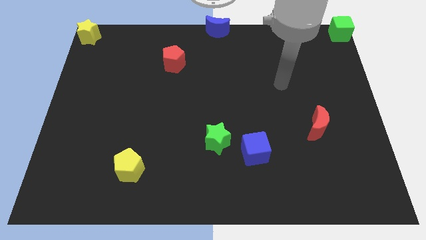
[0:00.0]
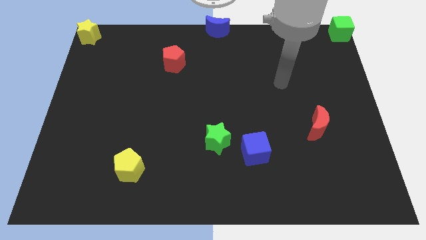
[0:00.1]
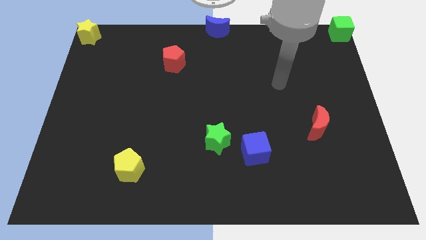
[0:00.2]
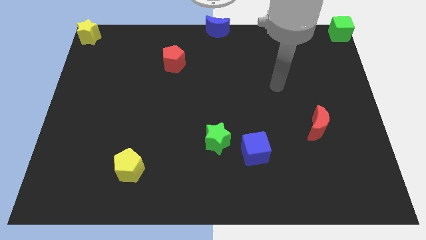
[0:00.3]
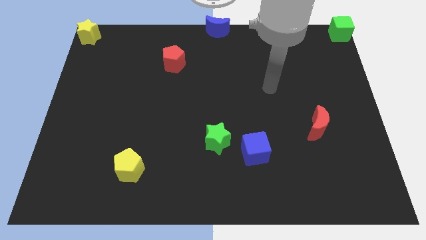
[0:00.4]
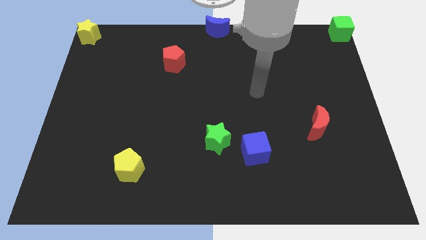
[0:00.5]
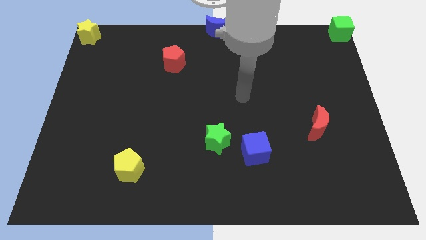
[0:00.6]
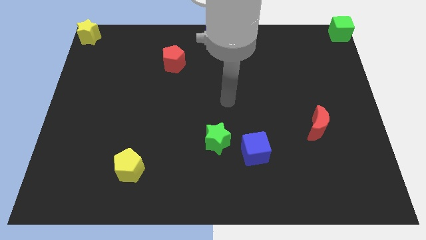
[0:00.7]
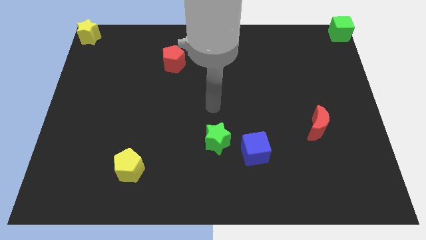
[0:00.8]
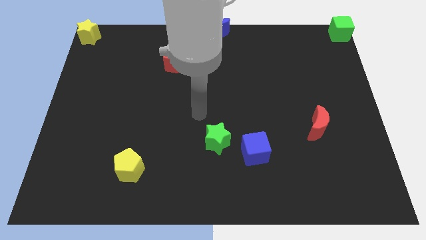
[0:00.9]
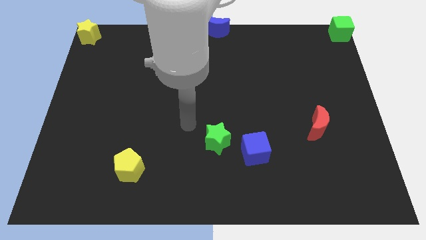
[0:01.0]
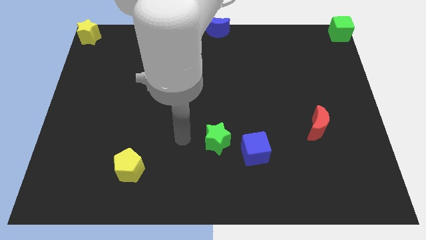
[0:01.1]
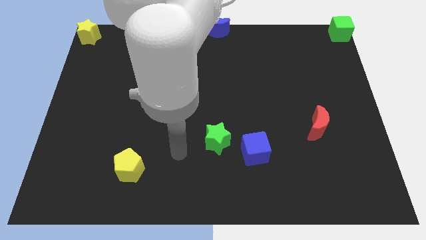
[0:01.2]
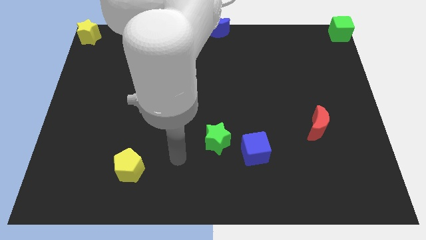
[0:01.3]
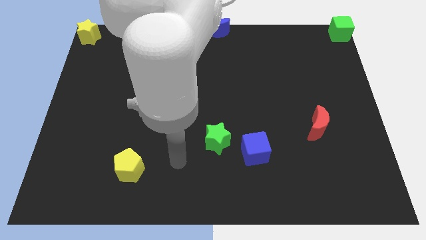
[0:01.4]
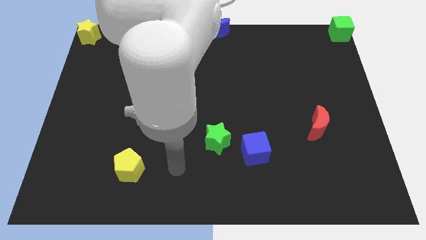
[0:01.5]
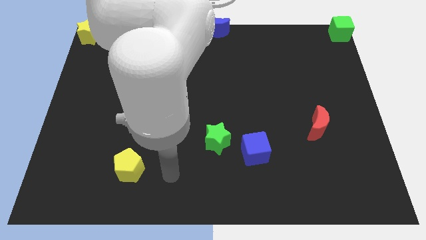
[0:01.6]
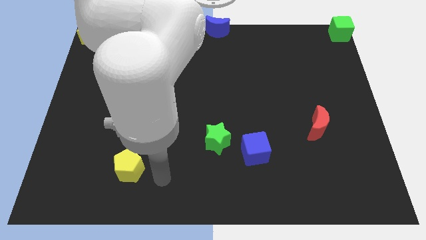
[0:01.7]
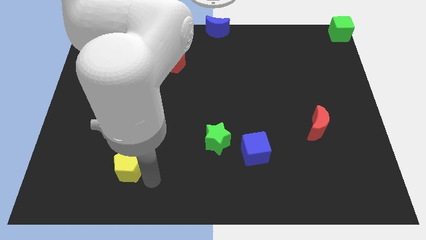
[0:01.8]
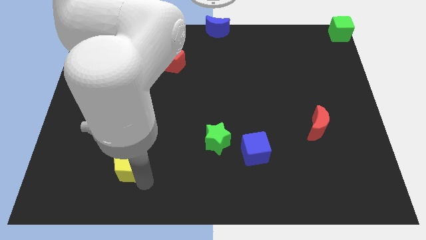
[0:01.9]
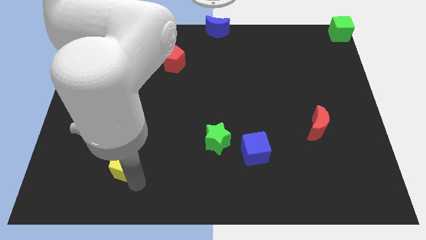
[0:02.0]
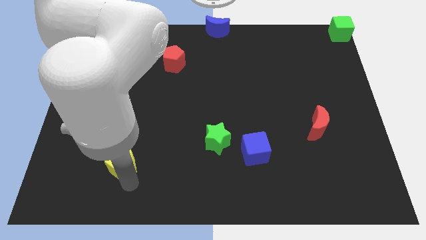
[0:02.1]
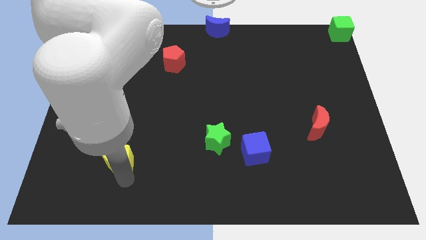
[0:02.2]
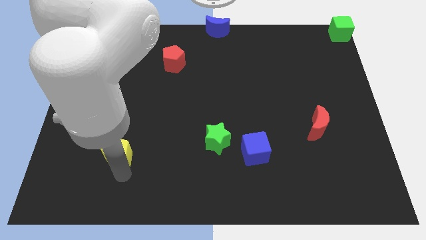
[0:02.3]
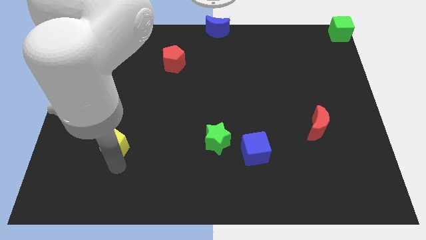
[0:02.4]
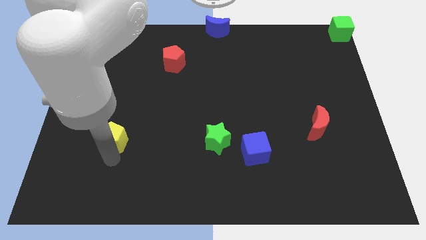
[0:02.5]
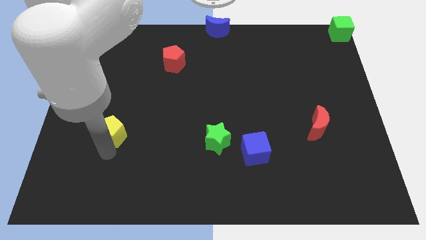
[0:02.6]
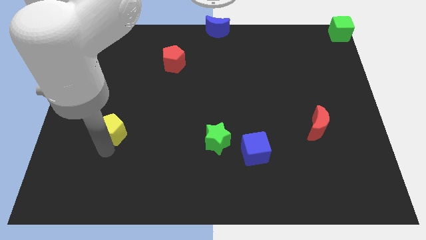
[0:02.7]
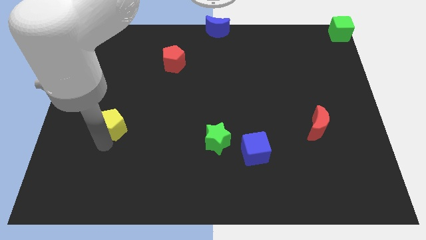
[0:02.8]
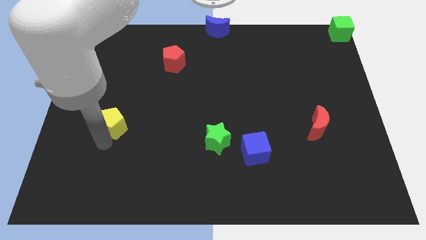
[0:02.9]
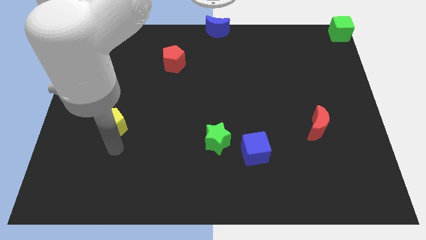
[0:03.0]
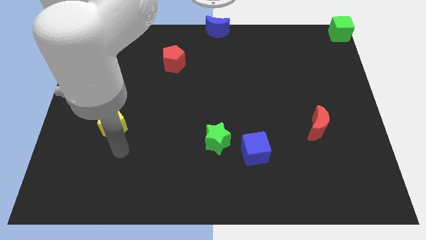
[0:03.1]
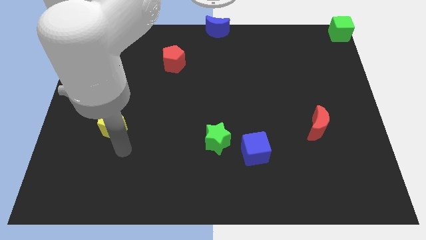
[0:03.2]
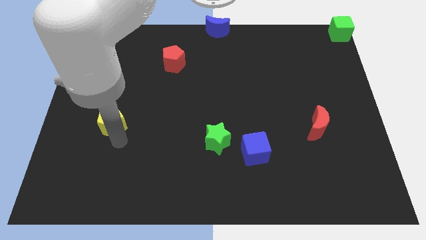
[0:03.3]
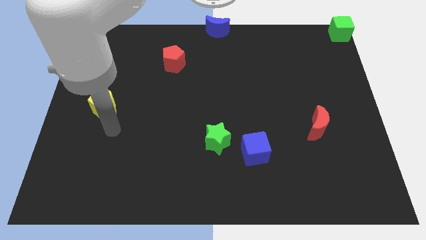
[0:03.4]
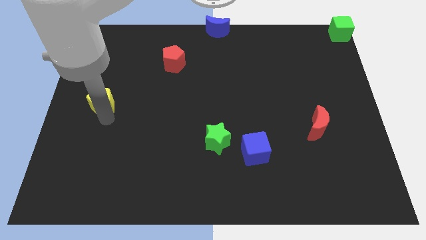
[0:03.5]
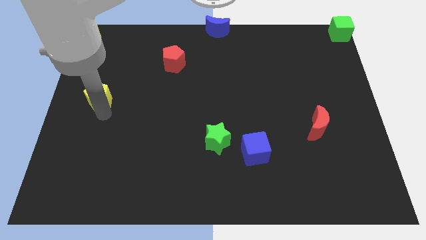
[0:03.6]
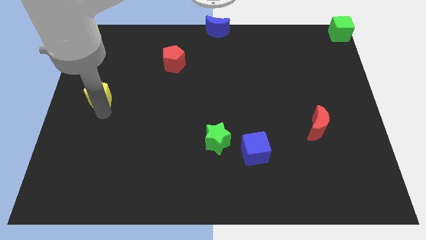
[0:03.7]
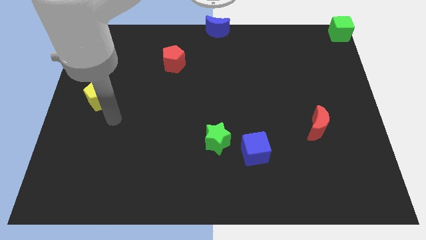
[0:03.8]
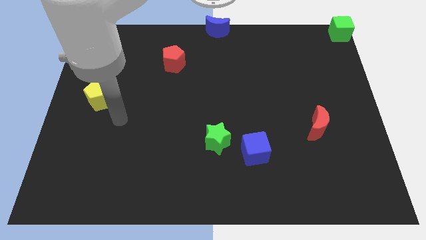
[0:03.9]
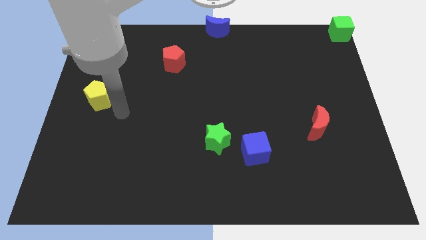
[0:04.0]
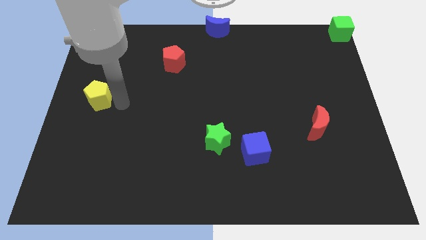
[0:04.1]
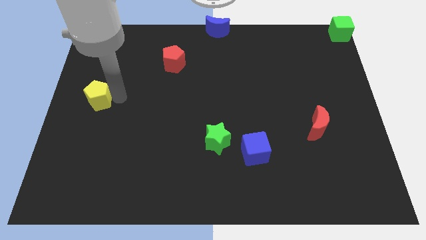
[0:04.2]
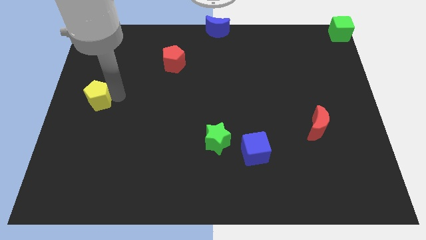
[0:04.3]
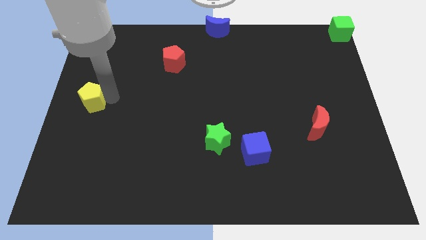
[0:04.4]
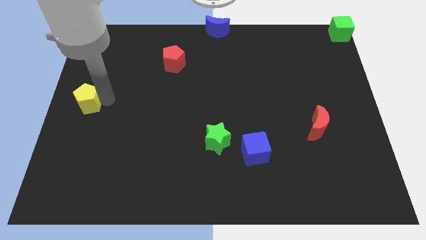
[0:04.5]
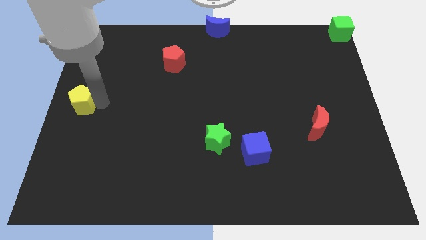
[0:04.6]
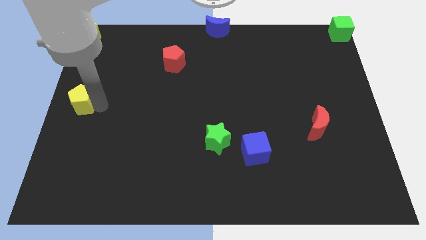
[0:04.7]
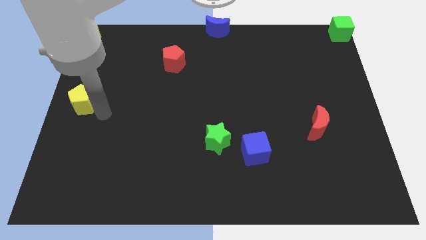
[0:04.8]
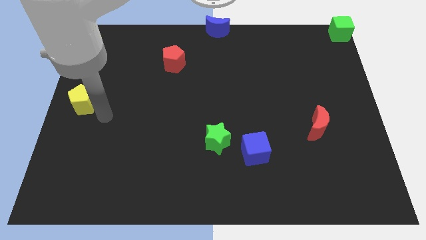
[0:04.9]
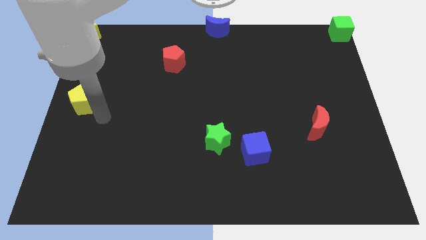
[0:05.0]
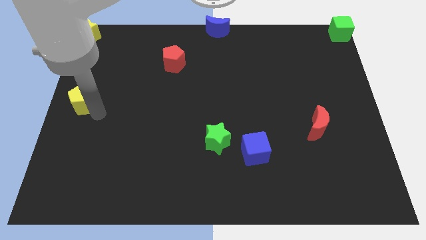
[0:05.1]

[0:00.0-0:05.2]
push the yellow pentagon towards up

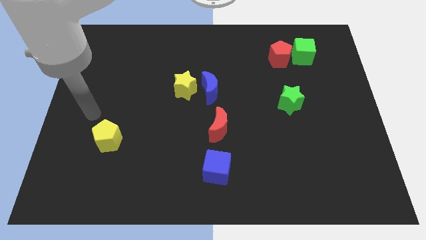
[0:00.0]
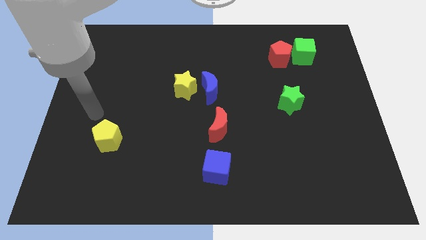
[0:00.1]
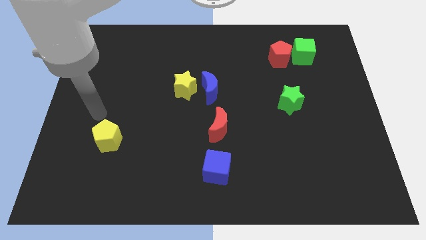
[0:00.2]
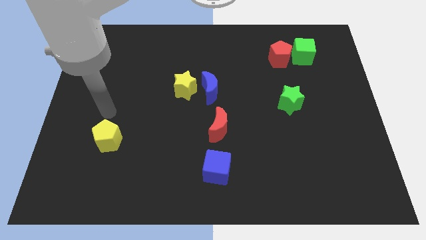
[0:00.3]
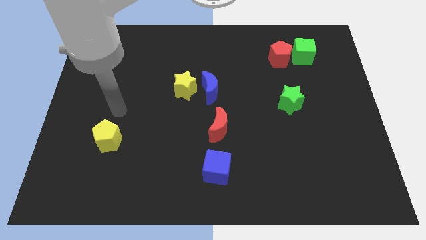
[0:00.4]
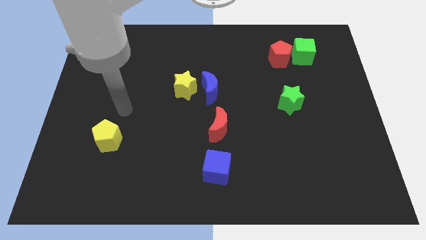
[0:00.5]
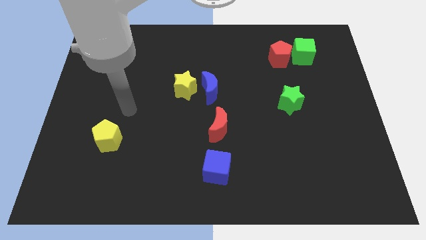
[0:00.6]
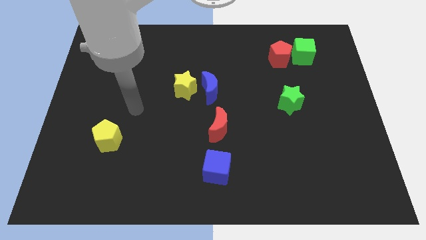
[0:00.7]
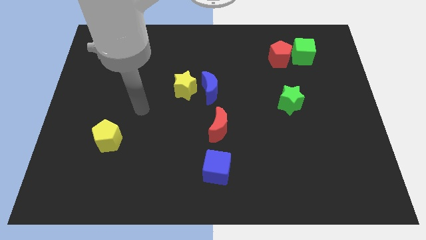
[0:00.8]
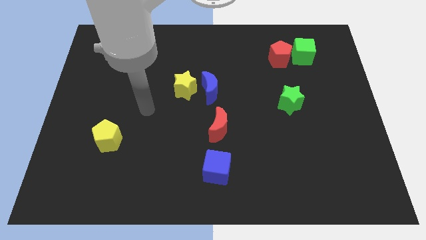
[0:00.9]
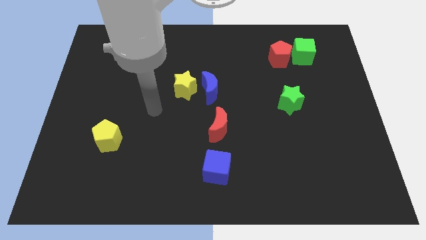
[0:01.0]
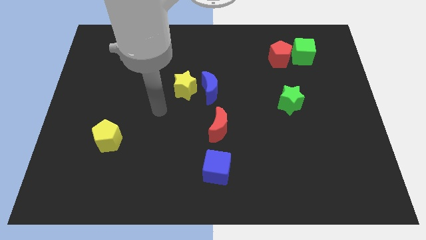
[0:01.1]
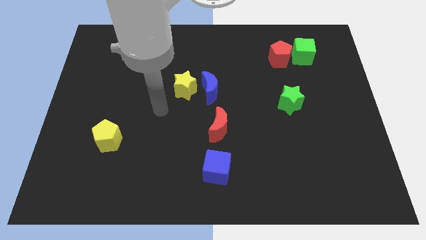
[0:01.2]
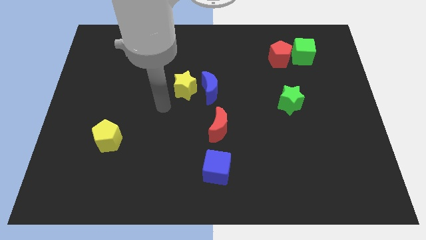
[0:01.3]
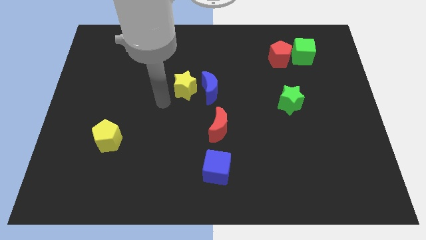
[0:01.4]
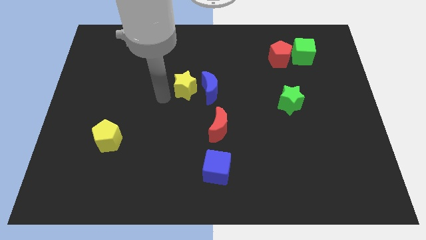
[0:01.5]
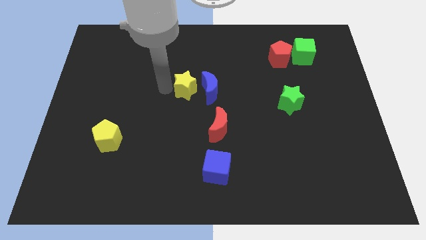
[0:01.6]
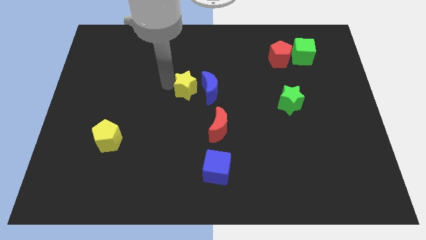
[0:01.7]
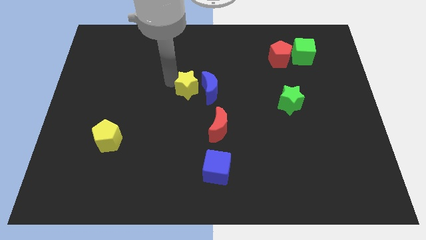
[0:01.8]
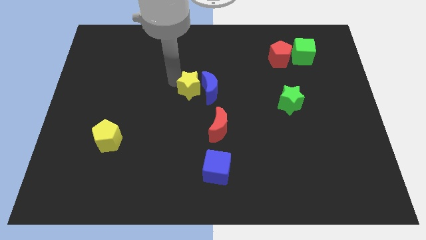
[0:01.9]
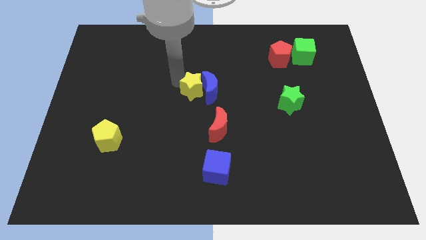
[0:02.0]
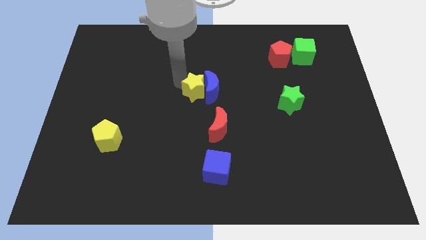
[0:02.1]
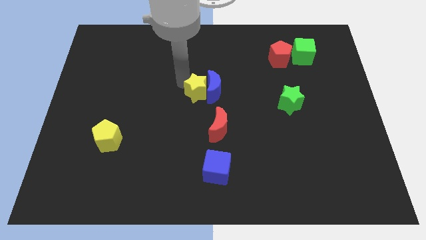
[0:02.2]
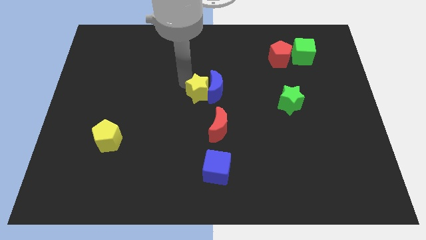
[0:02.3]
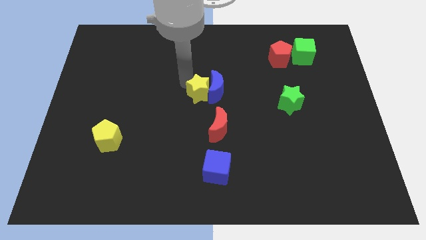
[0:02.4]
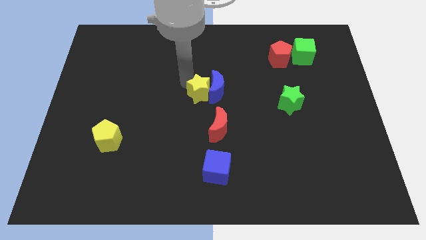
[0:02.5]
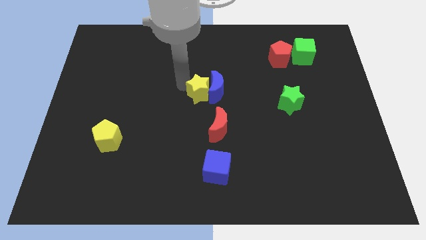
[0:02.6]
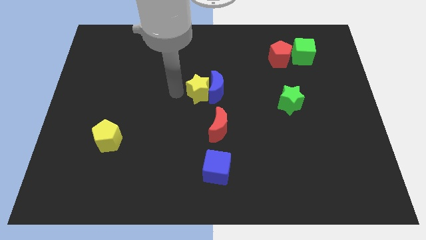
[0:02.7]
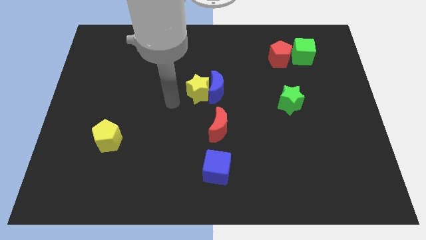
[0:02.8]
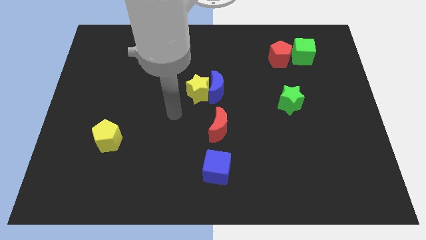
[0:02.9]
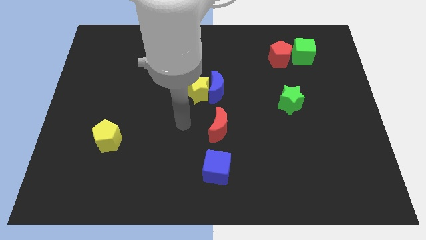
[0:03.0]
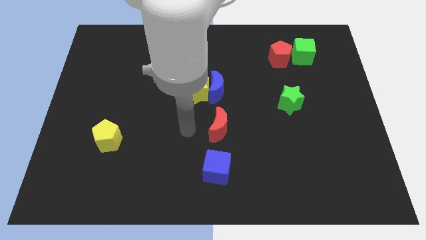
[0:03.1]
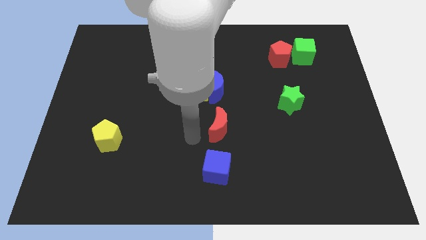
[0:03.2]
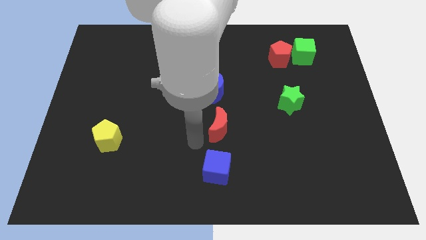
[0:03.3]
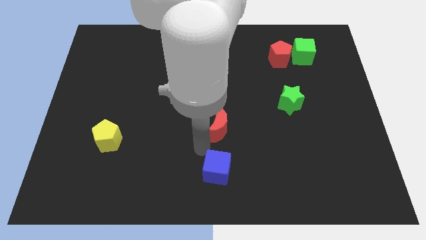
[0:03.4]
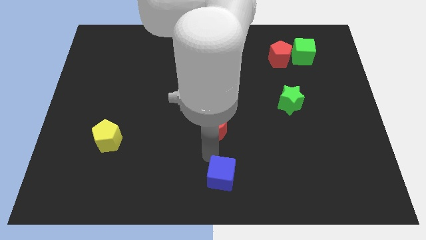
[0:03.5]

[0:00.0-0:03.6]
move the yellow star into the blue crescent
